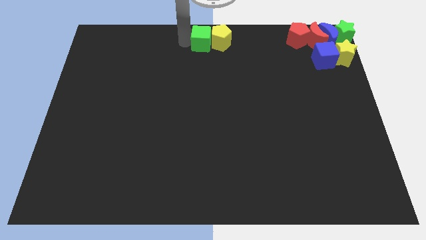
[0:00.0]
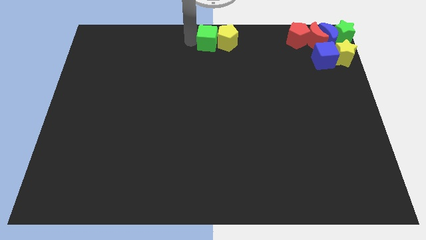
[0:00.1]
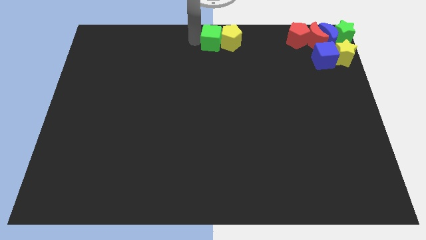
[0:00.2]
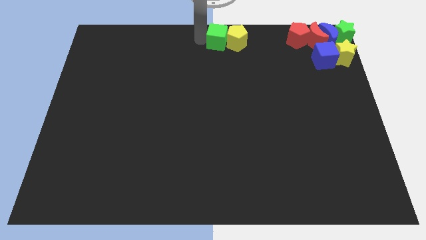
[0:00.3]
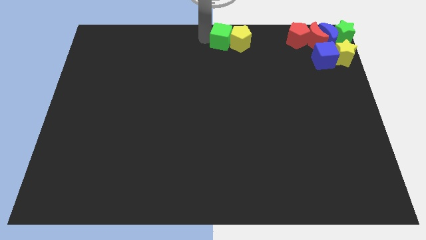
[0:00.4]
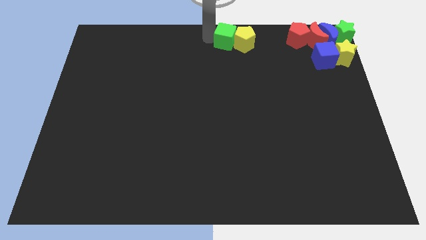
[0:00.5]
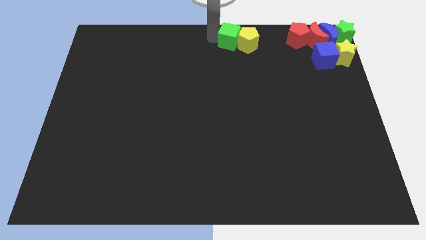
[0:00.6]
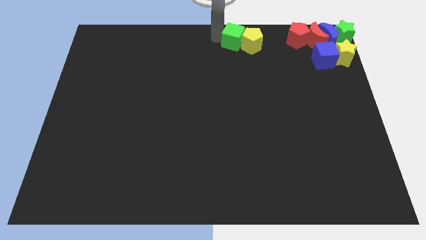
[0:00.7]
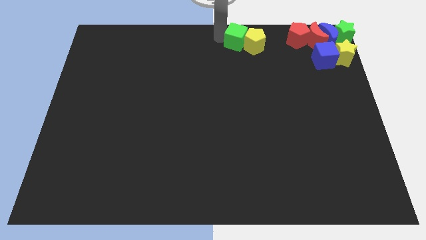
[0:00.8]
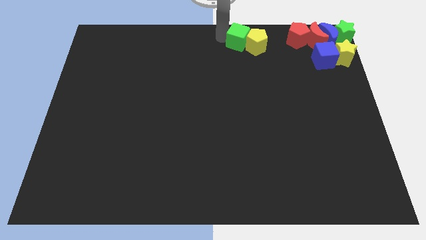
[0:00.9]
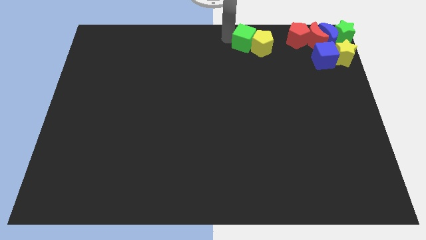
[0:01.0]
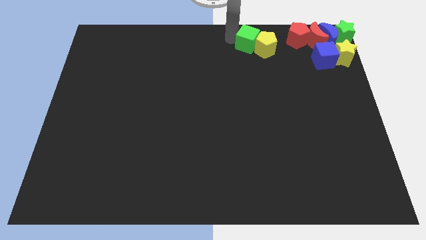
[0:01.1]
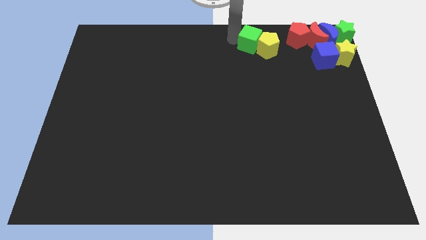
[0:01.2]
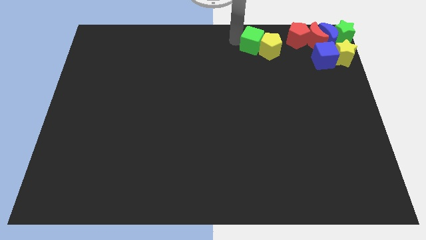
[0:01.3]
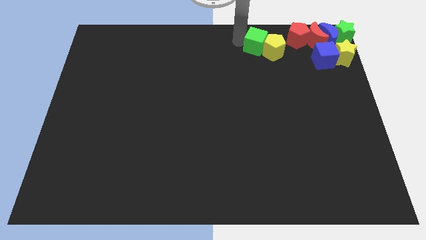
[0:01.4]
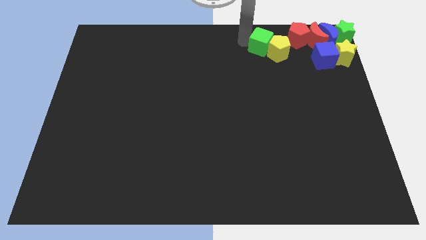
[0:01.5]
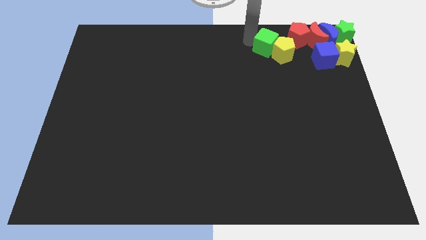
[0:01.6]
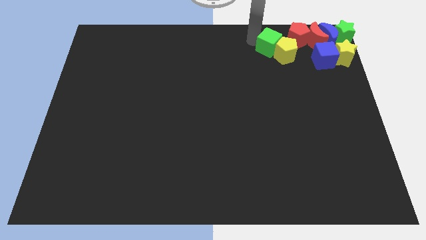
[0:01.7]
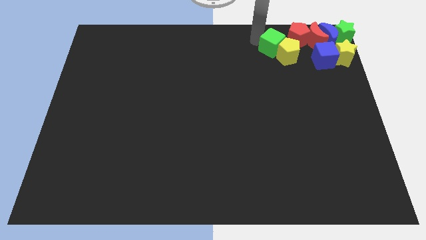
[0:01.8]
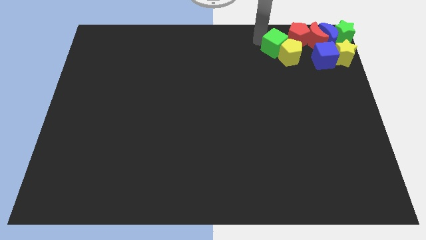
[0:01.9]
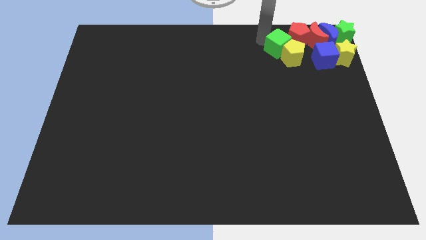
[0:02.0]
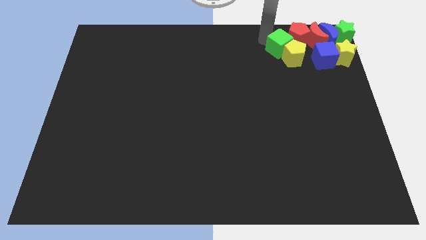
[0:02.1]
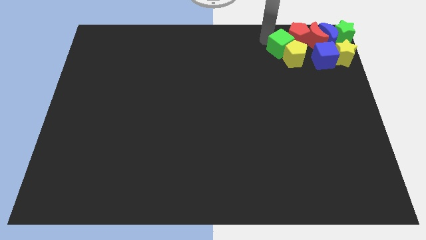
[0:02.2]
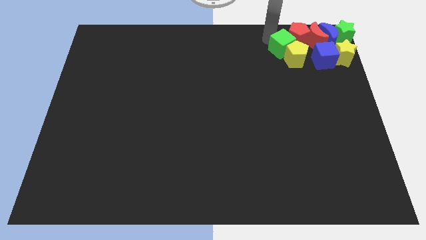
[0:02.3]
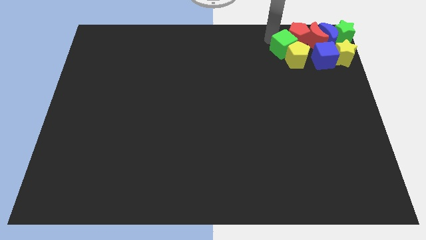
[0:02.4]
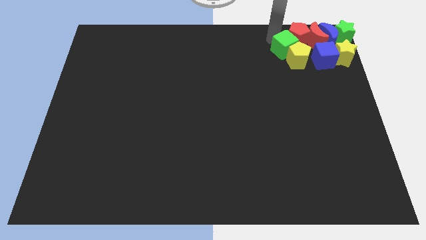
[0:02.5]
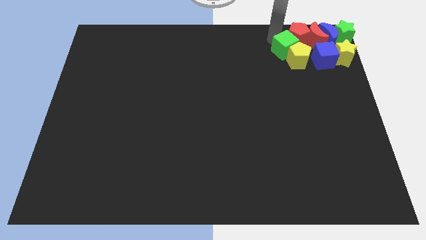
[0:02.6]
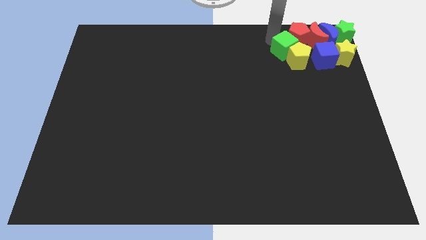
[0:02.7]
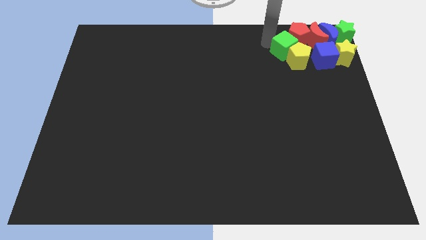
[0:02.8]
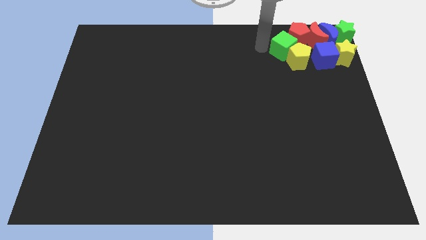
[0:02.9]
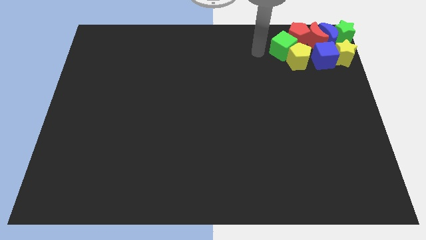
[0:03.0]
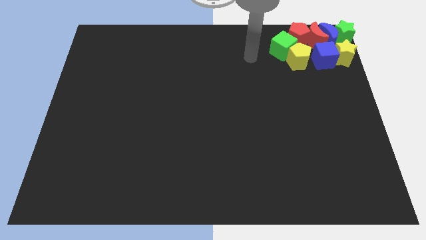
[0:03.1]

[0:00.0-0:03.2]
move green cube along with yellow pentagon into group of blocks

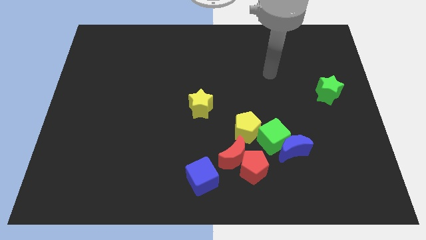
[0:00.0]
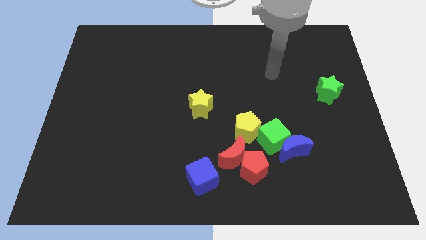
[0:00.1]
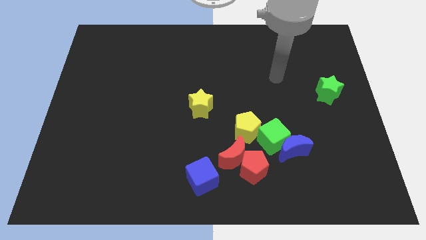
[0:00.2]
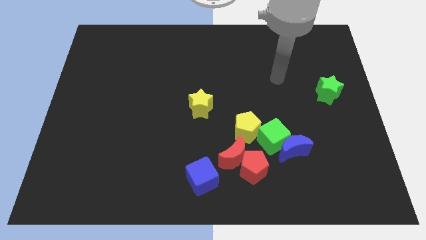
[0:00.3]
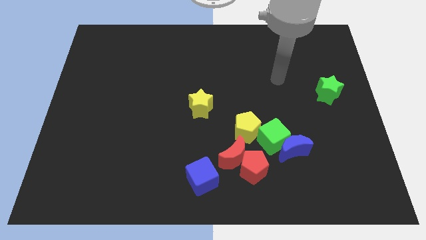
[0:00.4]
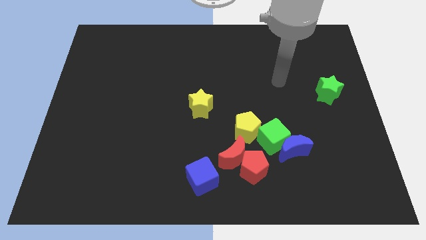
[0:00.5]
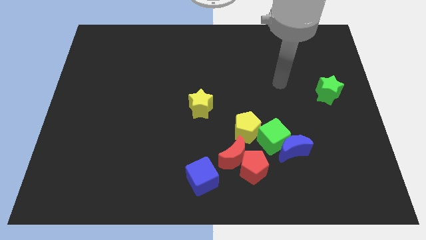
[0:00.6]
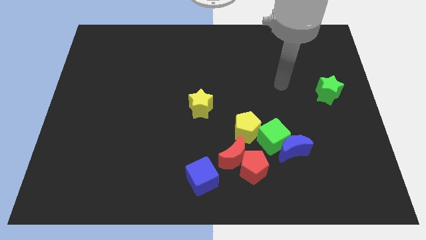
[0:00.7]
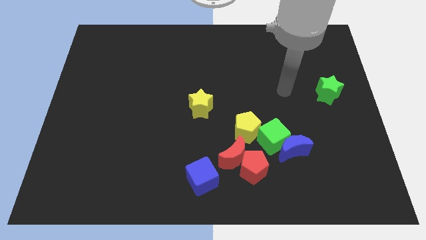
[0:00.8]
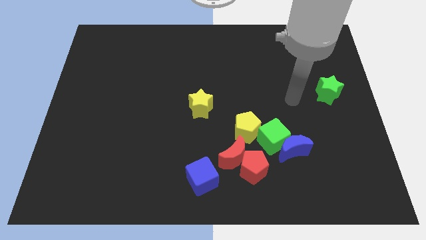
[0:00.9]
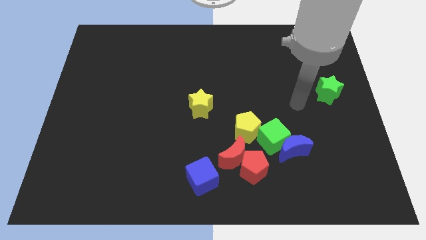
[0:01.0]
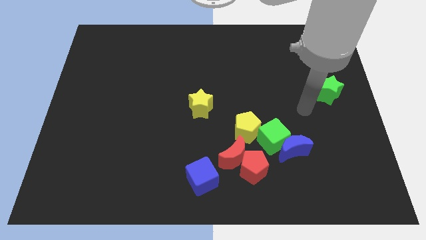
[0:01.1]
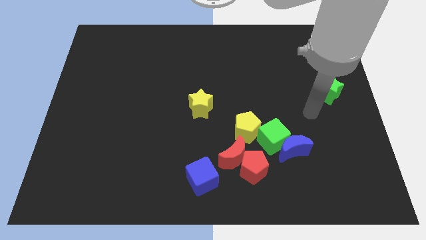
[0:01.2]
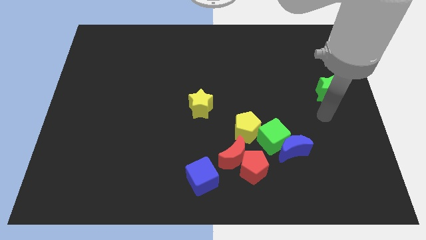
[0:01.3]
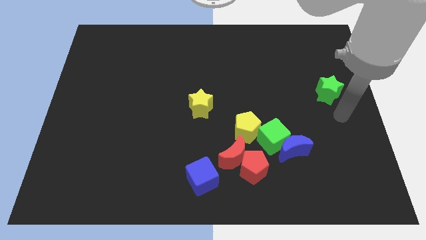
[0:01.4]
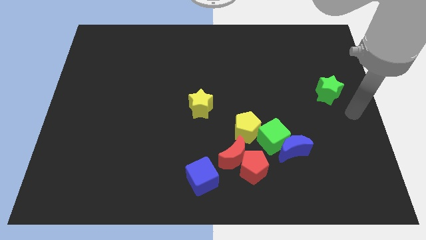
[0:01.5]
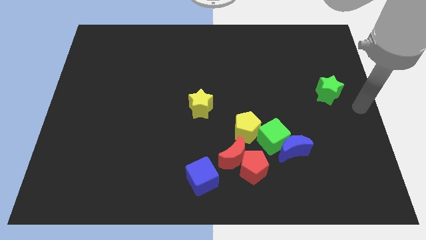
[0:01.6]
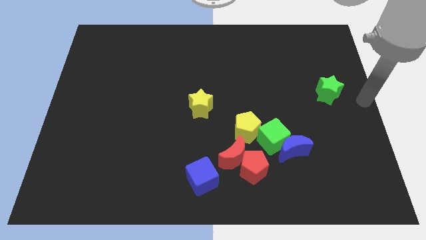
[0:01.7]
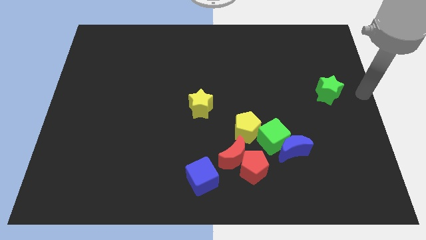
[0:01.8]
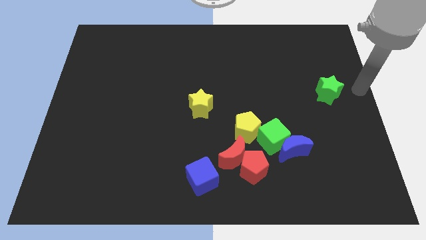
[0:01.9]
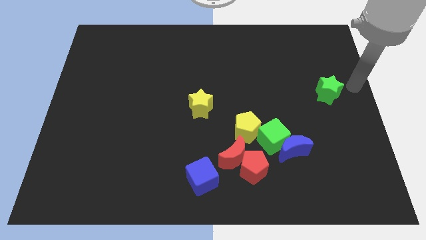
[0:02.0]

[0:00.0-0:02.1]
point your hand at the right side of the green star

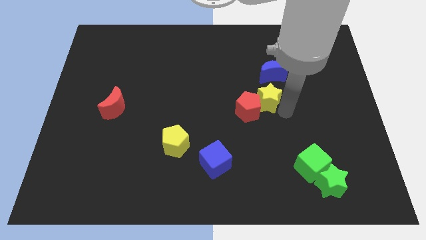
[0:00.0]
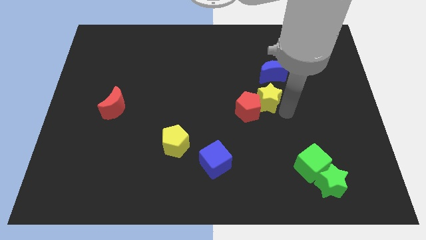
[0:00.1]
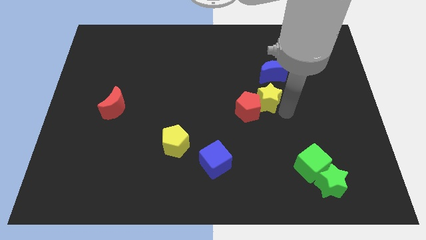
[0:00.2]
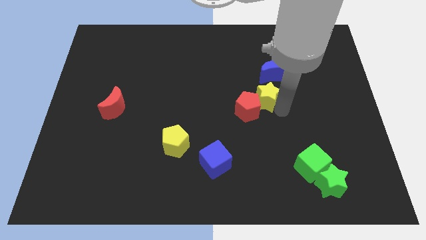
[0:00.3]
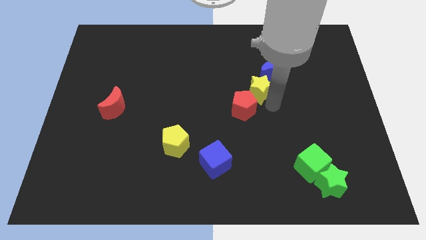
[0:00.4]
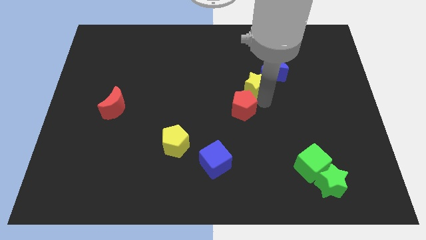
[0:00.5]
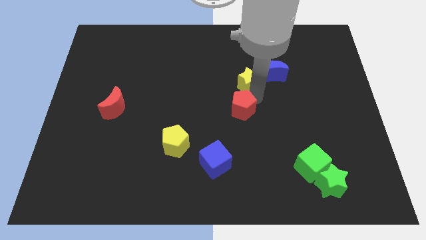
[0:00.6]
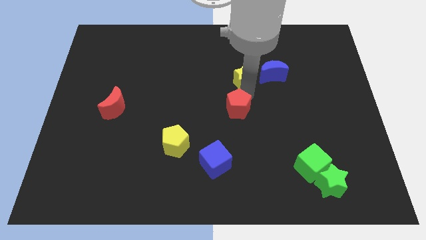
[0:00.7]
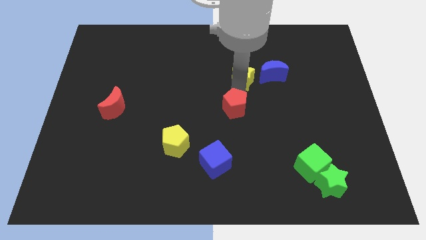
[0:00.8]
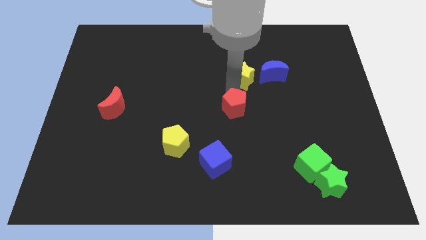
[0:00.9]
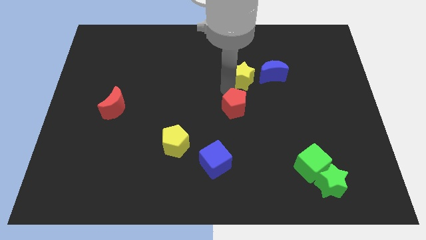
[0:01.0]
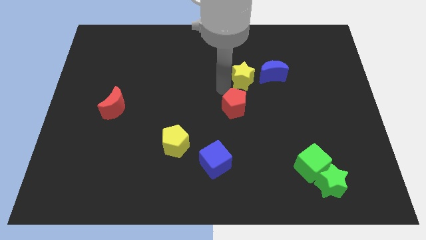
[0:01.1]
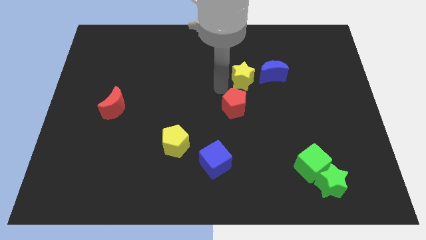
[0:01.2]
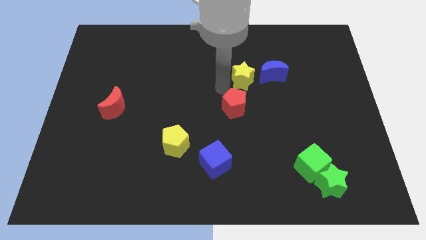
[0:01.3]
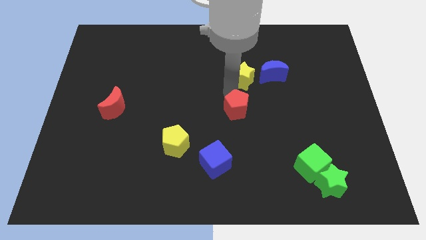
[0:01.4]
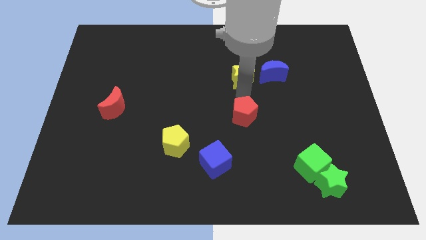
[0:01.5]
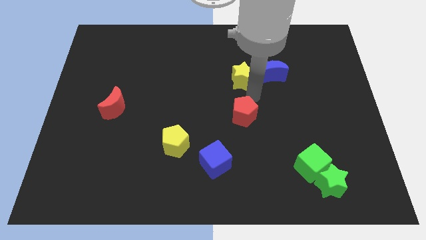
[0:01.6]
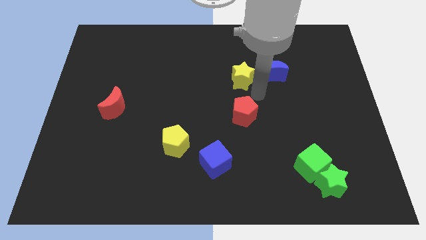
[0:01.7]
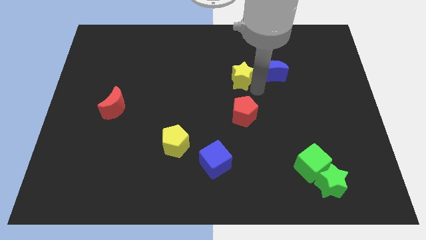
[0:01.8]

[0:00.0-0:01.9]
separate the yellow star from the red pentagon

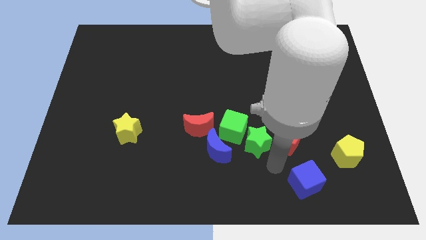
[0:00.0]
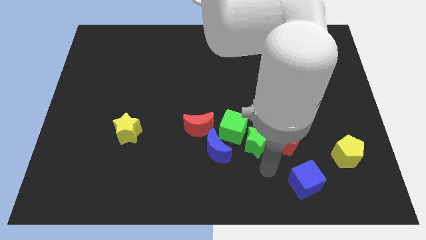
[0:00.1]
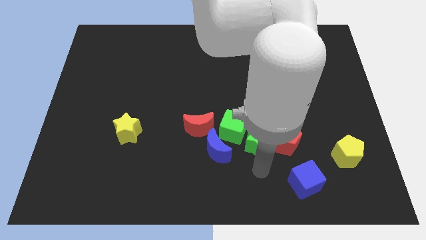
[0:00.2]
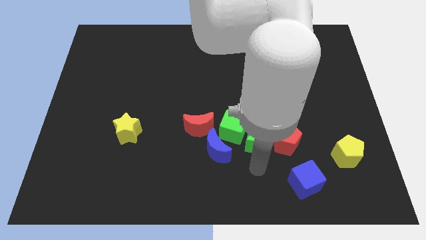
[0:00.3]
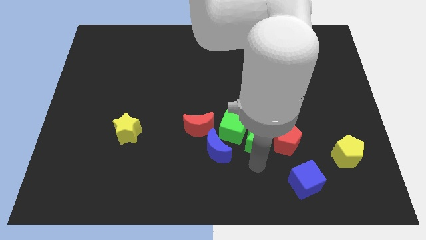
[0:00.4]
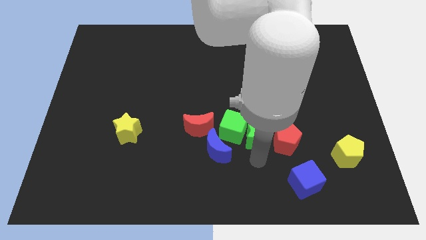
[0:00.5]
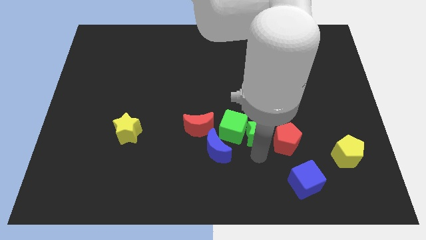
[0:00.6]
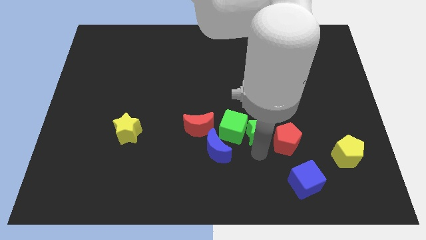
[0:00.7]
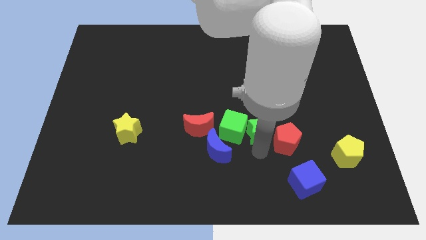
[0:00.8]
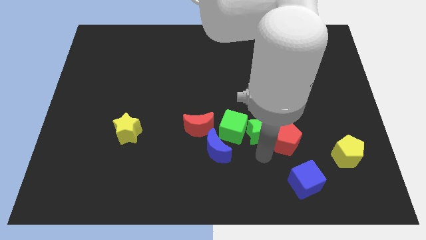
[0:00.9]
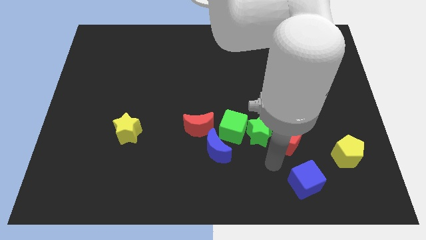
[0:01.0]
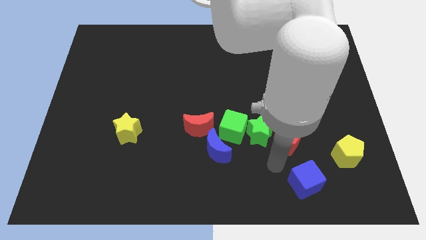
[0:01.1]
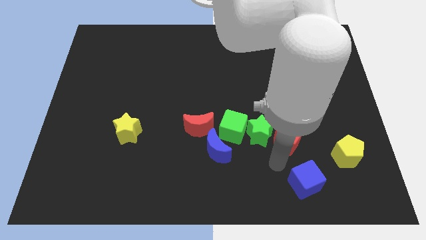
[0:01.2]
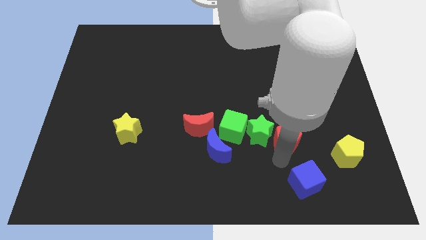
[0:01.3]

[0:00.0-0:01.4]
move the green star between the green cube and red pentagon

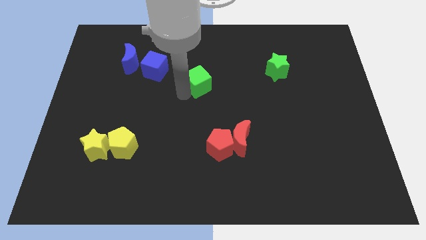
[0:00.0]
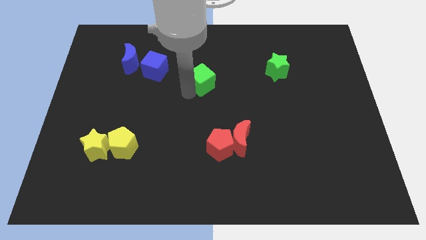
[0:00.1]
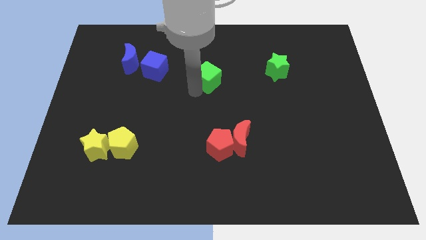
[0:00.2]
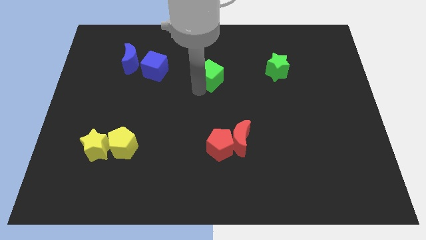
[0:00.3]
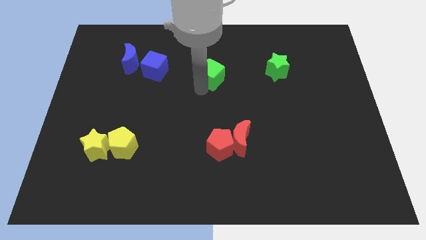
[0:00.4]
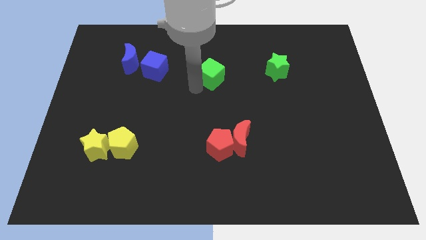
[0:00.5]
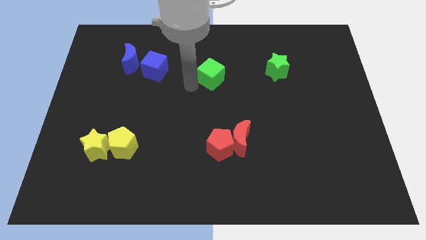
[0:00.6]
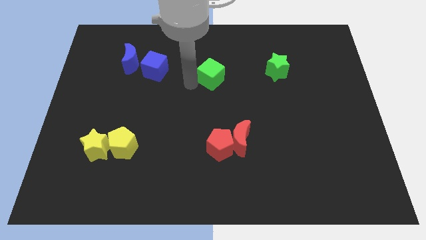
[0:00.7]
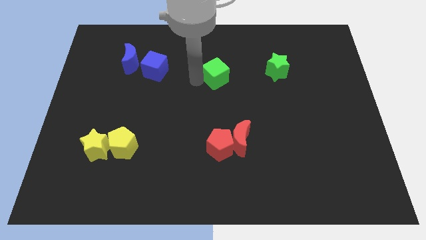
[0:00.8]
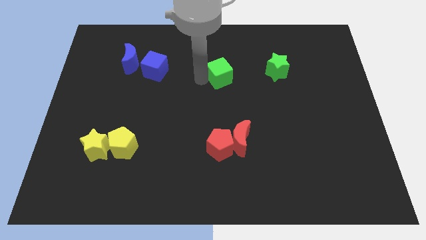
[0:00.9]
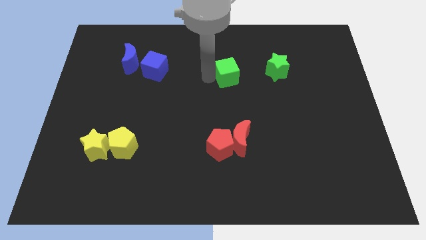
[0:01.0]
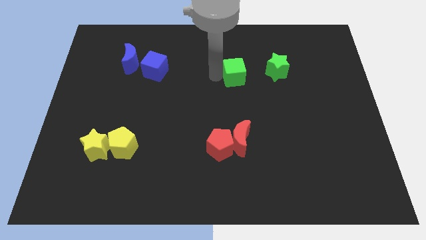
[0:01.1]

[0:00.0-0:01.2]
push the green cube above the red moon
